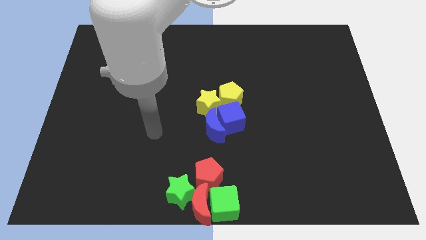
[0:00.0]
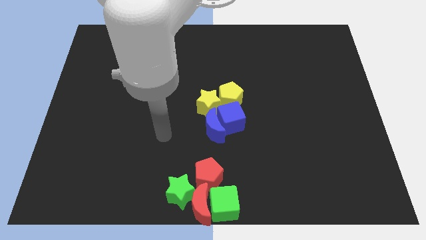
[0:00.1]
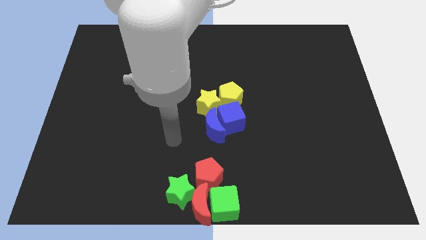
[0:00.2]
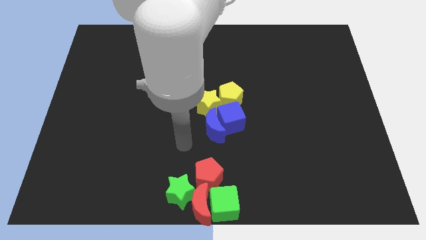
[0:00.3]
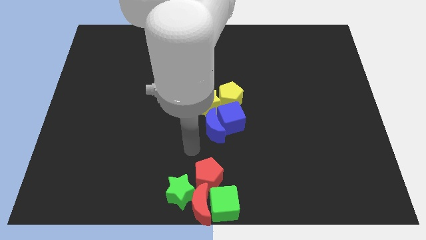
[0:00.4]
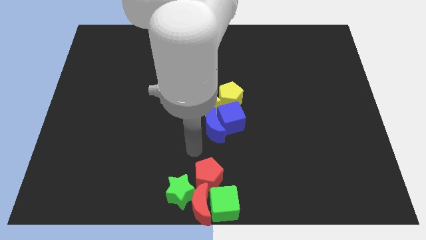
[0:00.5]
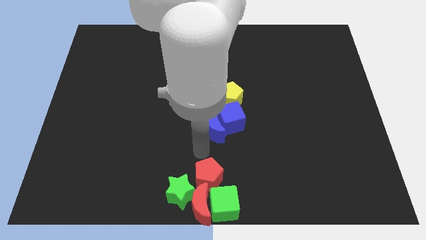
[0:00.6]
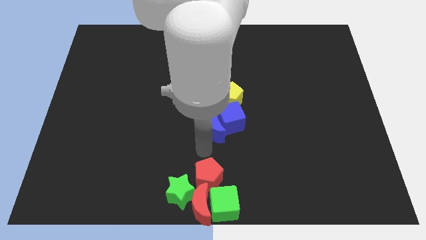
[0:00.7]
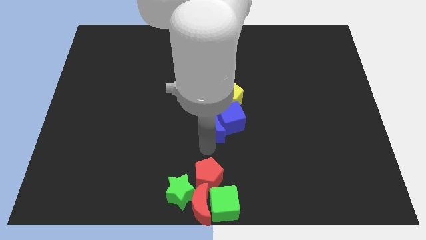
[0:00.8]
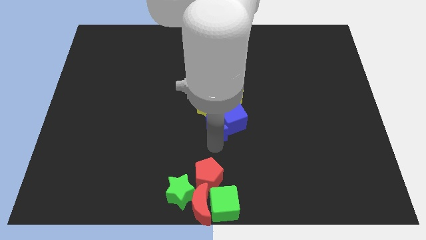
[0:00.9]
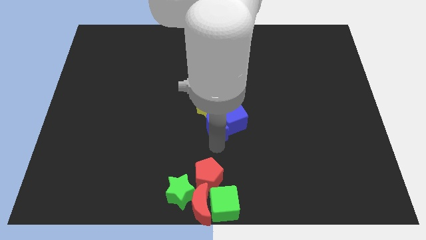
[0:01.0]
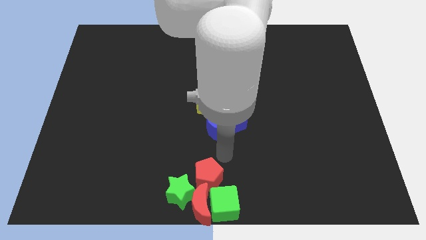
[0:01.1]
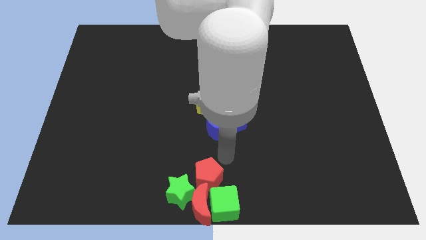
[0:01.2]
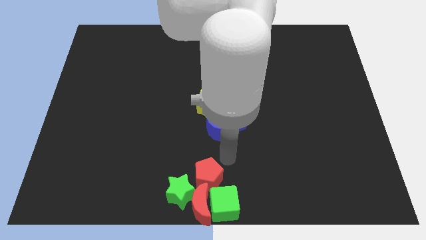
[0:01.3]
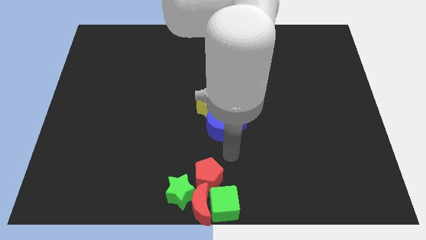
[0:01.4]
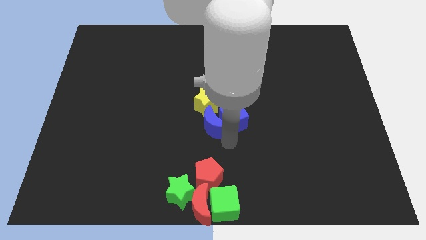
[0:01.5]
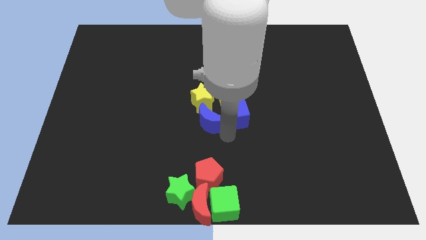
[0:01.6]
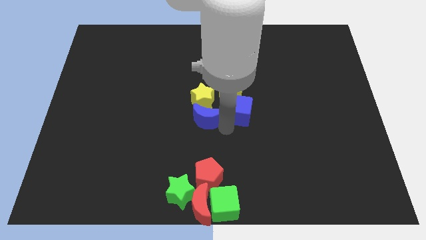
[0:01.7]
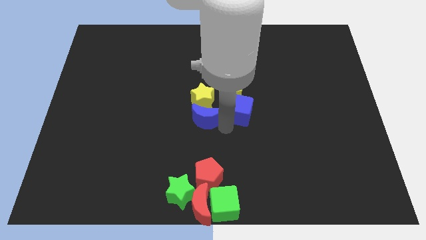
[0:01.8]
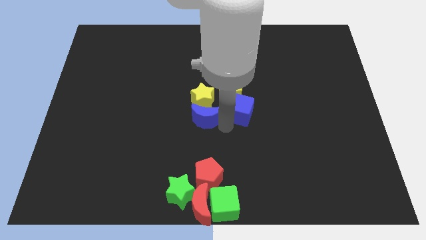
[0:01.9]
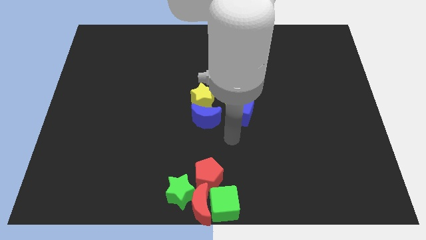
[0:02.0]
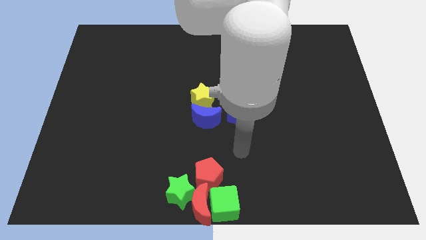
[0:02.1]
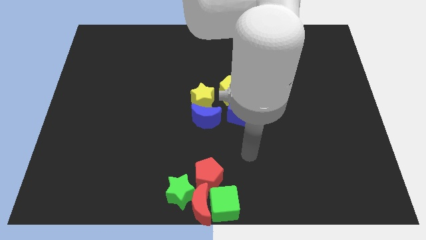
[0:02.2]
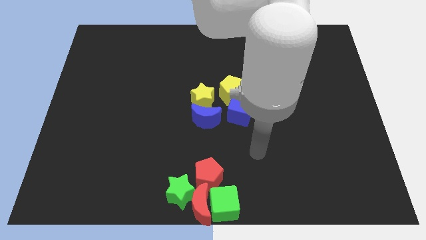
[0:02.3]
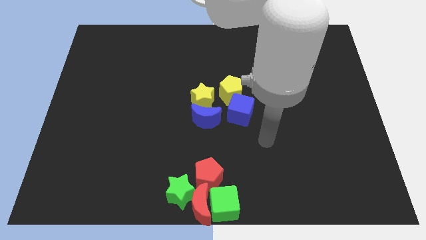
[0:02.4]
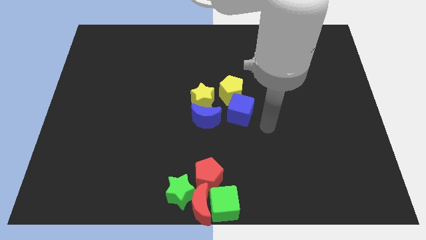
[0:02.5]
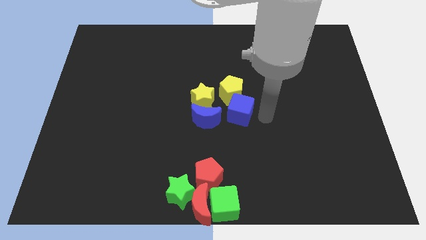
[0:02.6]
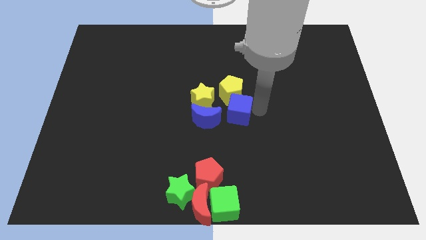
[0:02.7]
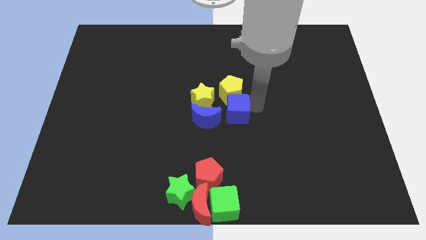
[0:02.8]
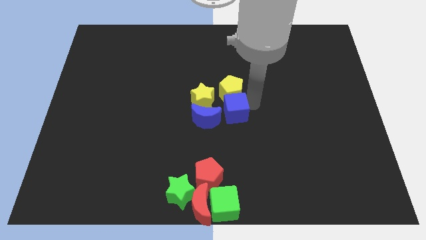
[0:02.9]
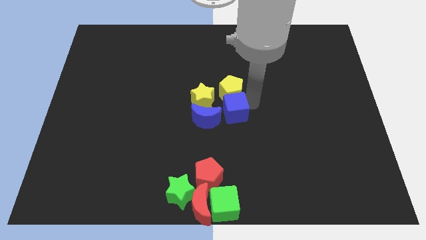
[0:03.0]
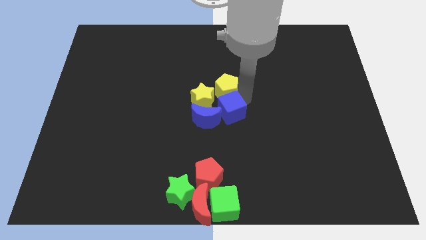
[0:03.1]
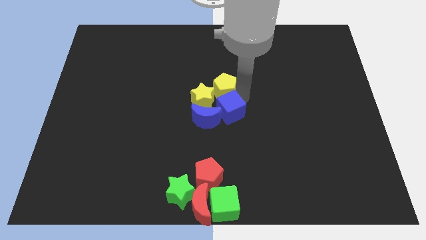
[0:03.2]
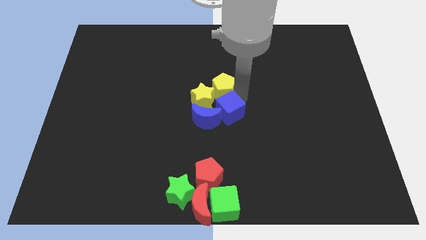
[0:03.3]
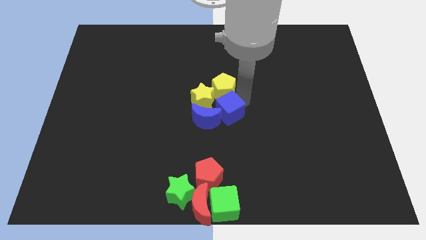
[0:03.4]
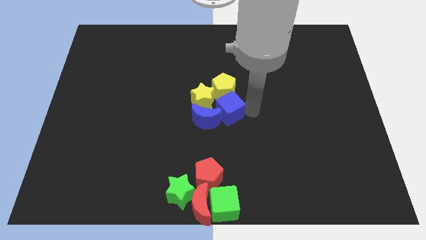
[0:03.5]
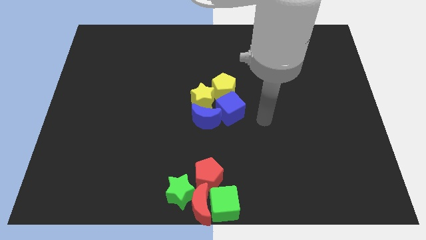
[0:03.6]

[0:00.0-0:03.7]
adjust the blue and yellow blocks at center of the board

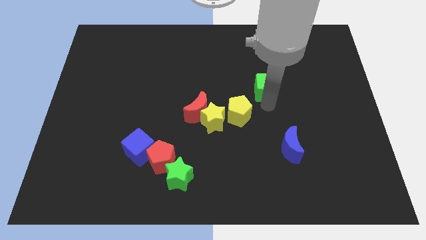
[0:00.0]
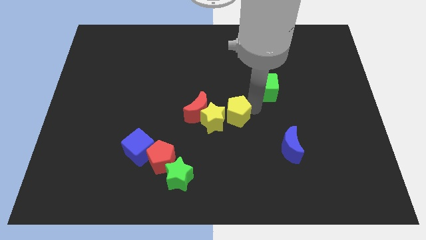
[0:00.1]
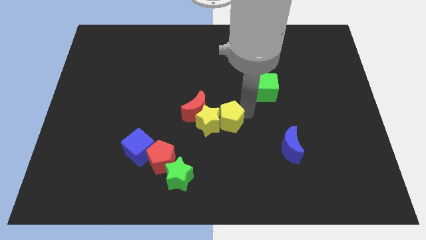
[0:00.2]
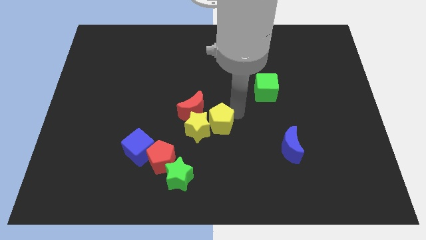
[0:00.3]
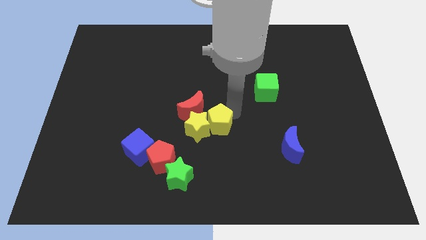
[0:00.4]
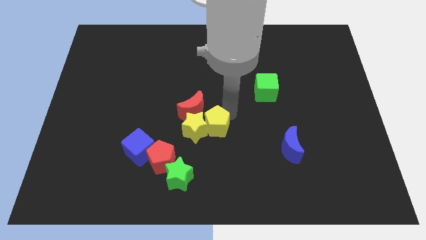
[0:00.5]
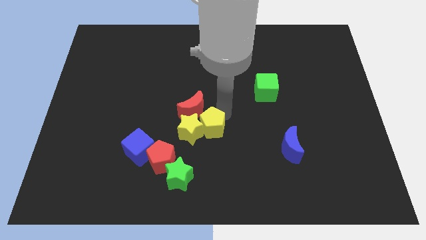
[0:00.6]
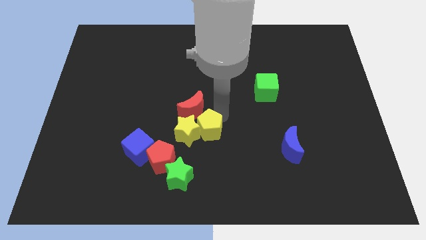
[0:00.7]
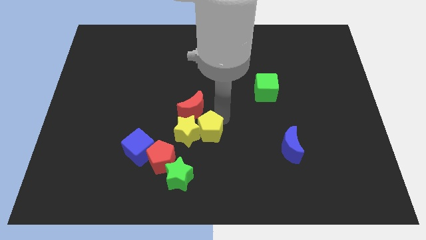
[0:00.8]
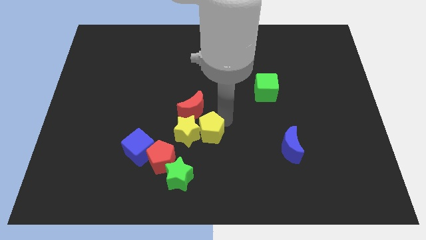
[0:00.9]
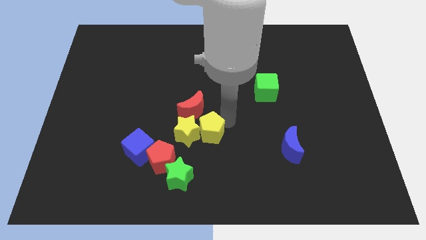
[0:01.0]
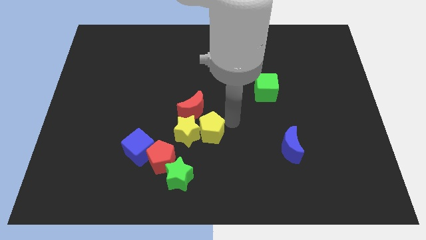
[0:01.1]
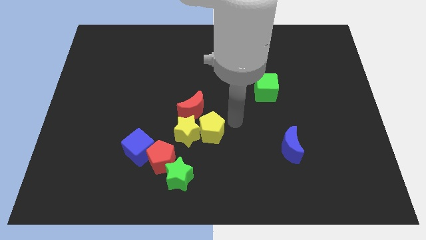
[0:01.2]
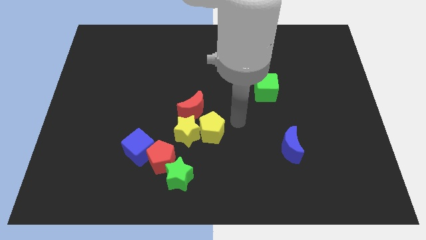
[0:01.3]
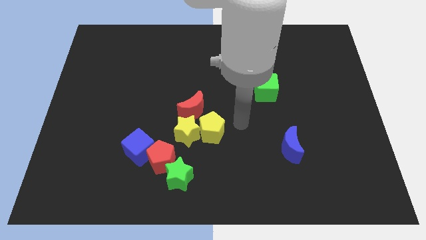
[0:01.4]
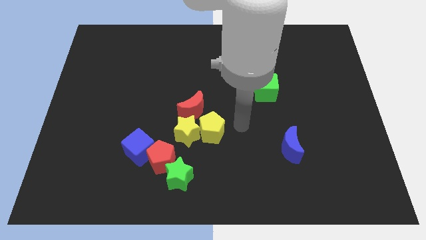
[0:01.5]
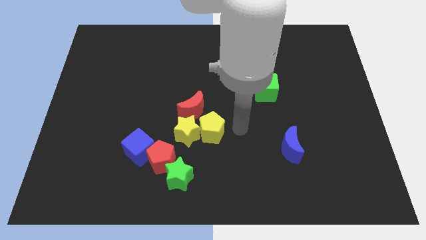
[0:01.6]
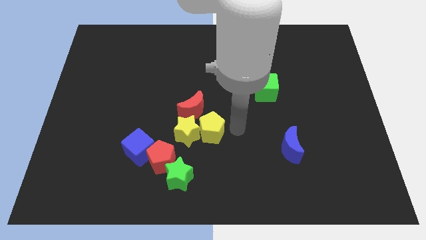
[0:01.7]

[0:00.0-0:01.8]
move the yellow pentagon into the yellow star

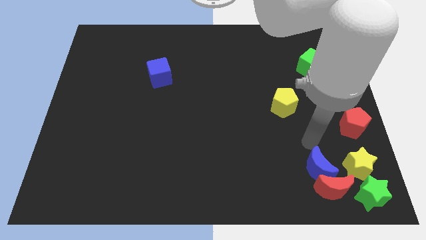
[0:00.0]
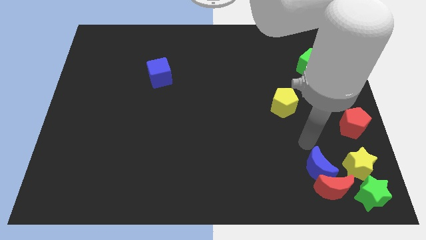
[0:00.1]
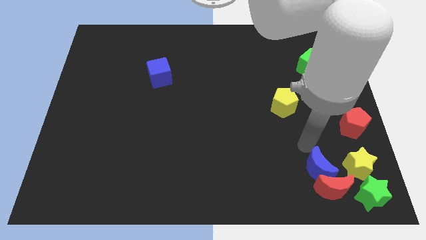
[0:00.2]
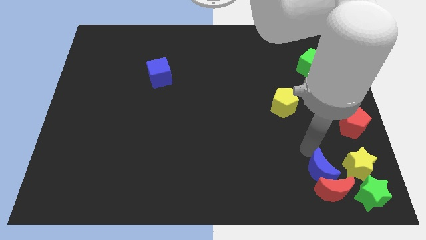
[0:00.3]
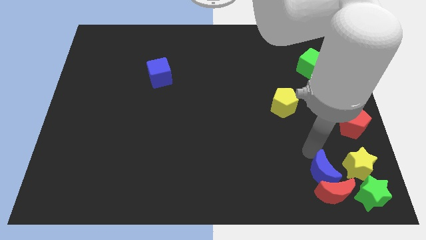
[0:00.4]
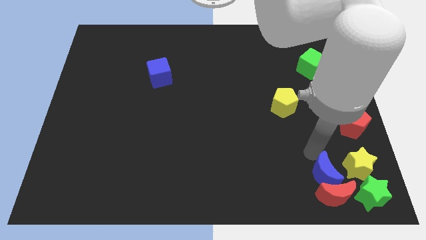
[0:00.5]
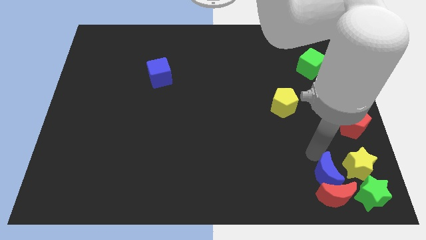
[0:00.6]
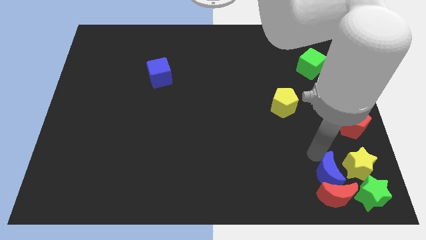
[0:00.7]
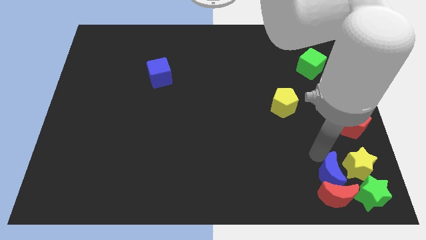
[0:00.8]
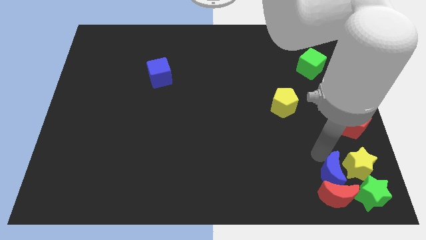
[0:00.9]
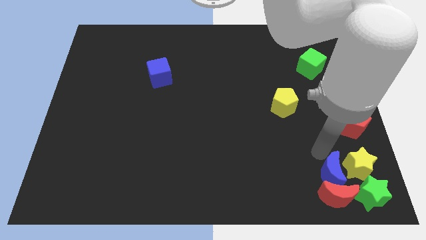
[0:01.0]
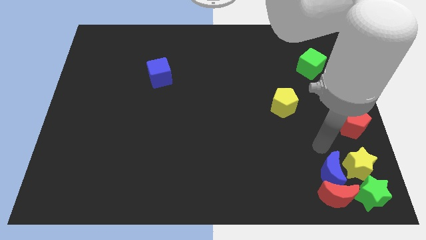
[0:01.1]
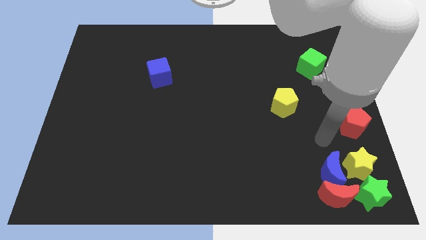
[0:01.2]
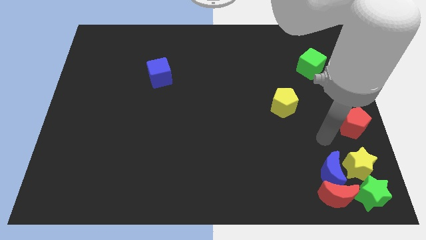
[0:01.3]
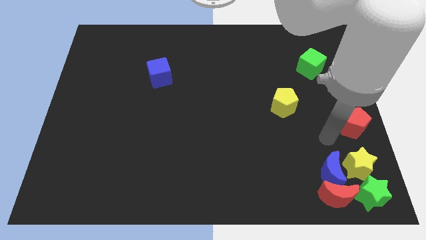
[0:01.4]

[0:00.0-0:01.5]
move both the moons slightly towards the bottom right

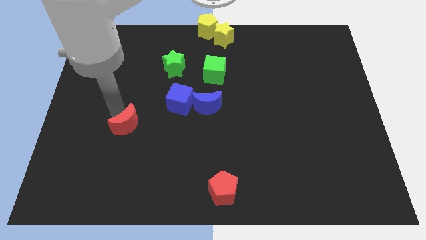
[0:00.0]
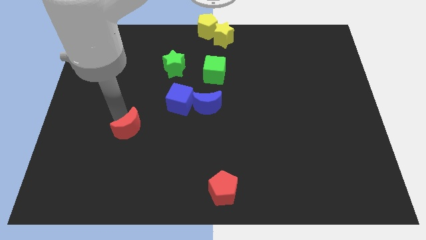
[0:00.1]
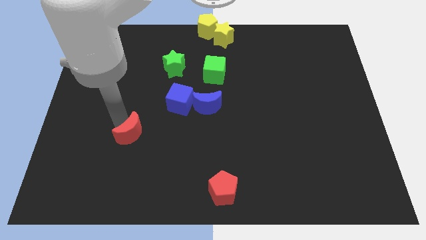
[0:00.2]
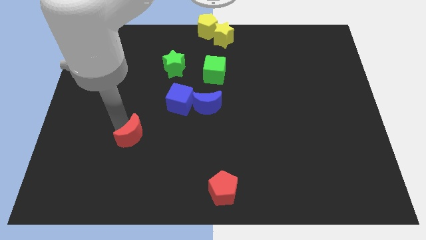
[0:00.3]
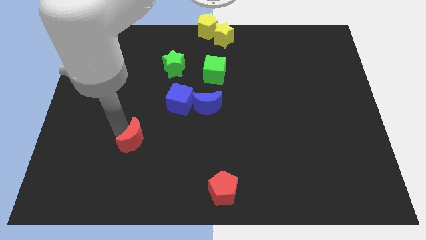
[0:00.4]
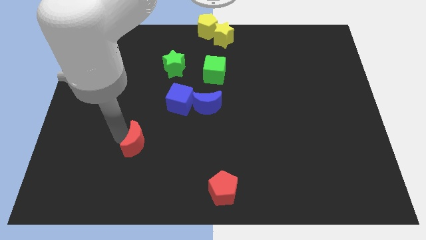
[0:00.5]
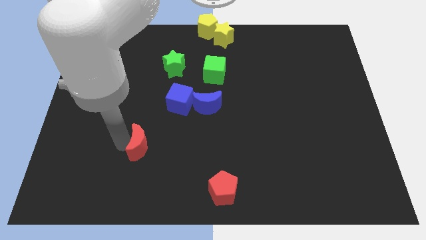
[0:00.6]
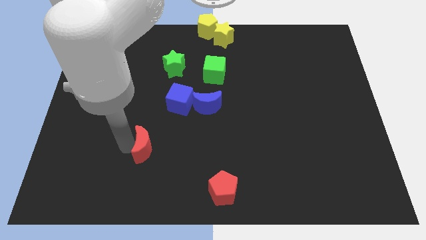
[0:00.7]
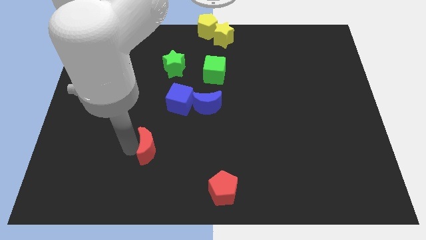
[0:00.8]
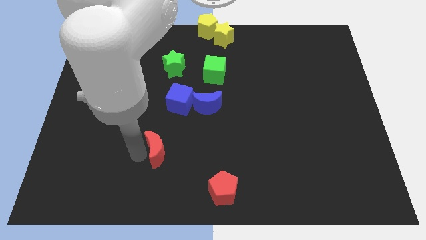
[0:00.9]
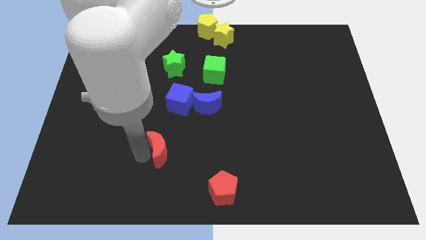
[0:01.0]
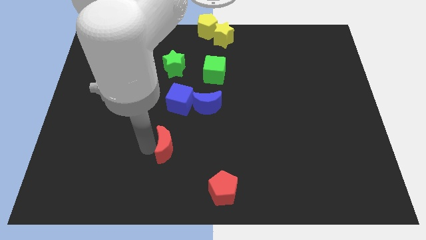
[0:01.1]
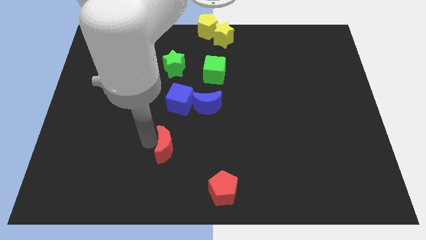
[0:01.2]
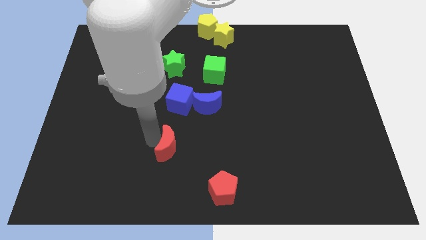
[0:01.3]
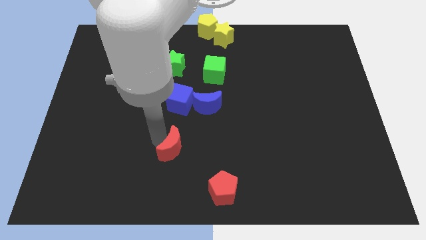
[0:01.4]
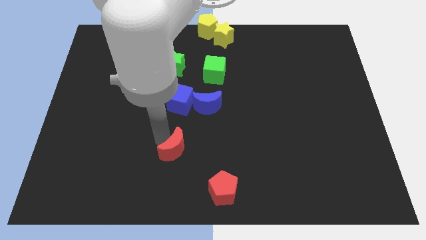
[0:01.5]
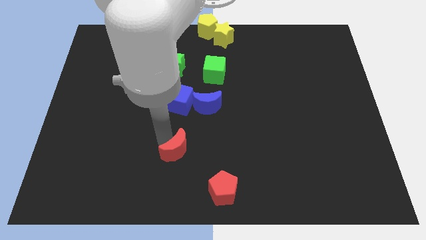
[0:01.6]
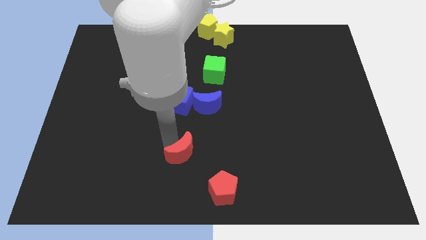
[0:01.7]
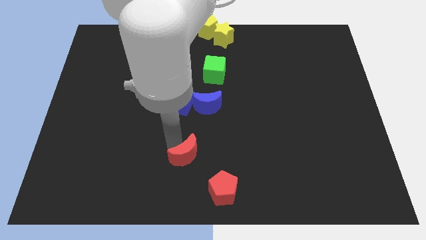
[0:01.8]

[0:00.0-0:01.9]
place the red moon diagonally to the top left of the red pentagon
